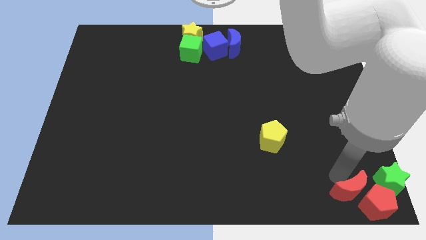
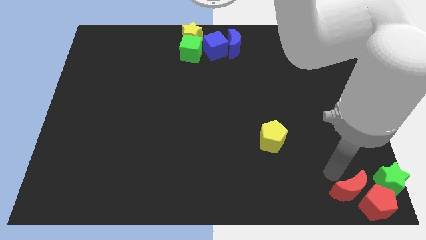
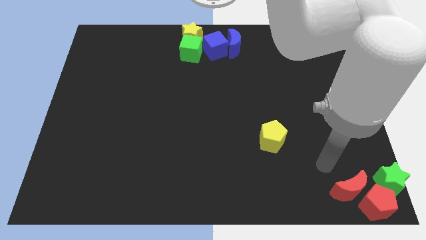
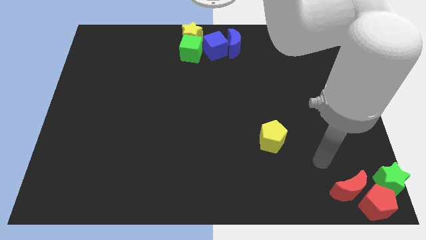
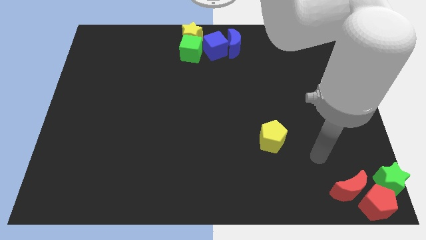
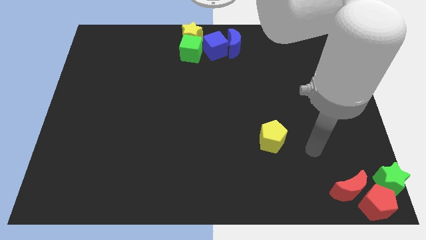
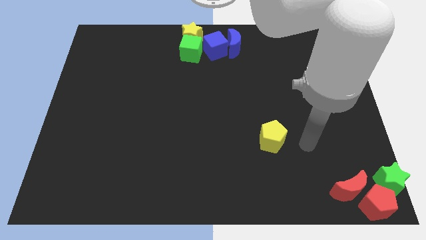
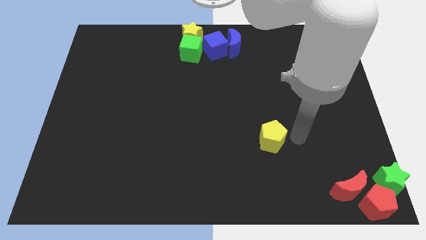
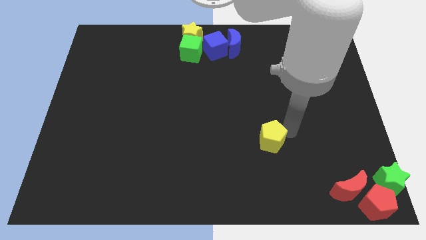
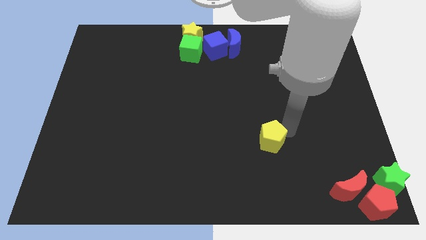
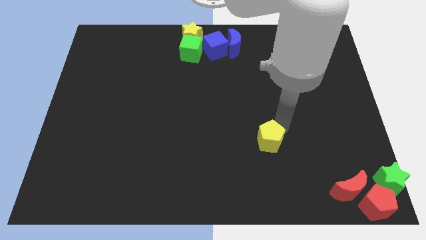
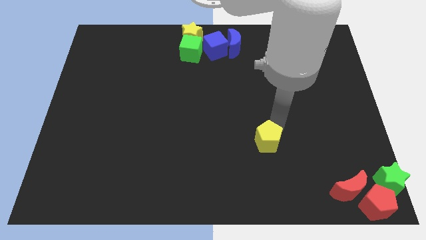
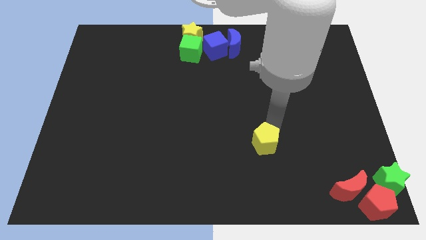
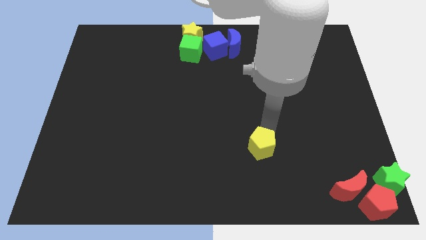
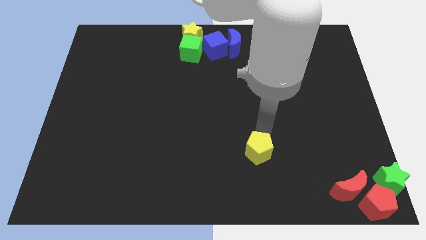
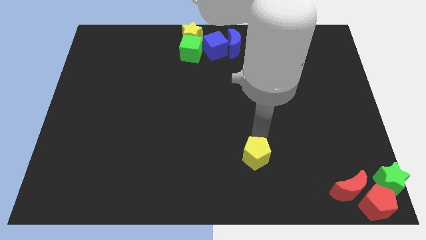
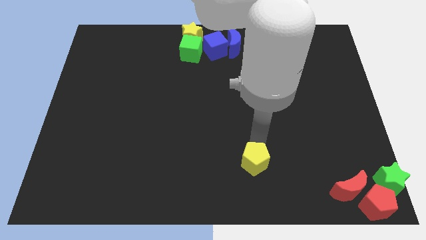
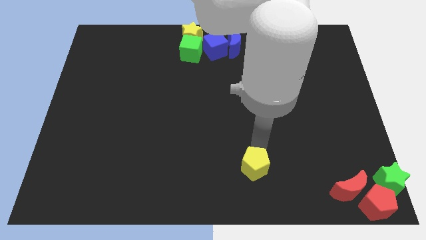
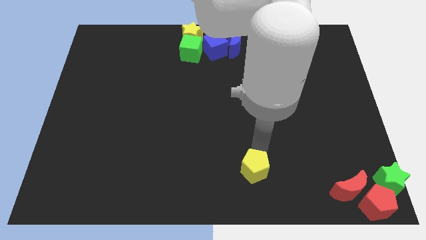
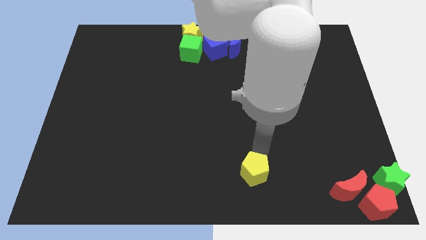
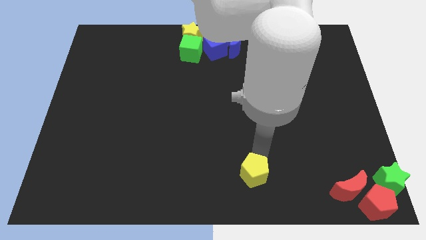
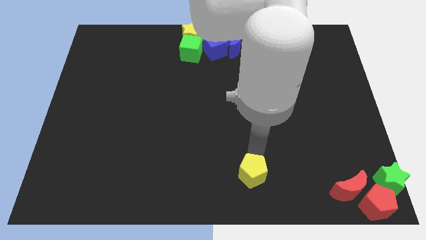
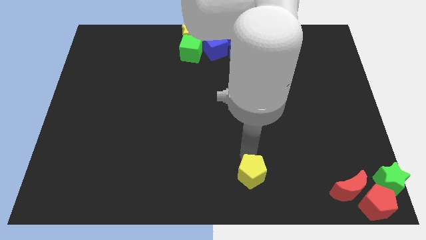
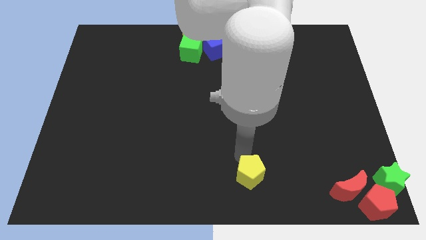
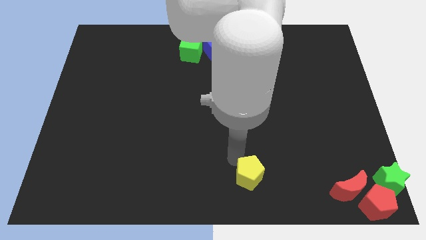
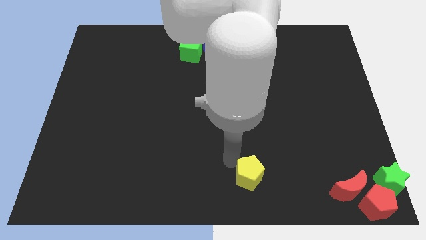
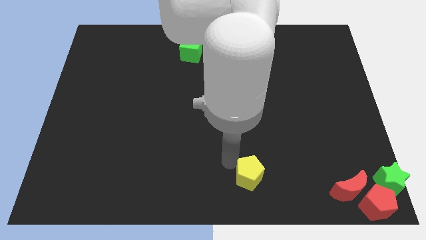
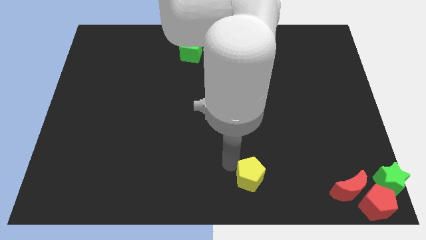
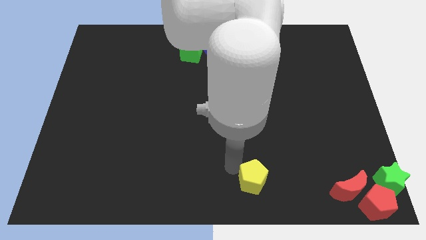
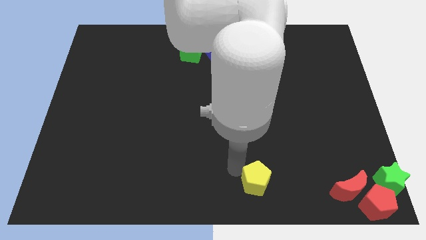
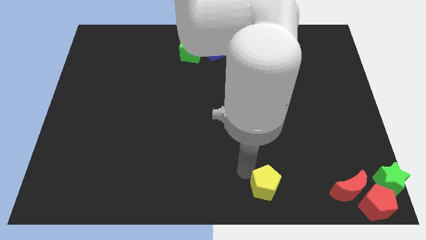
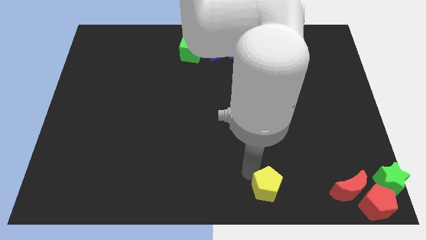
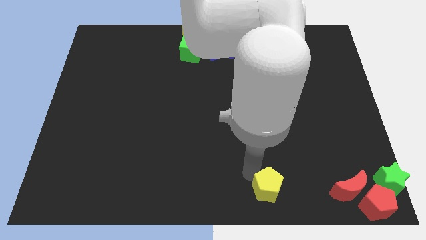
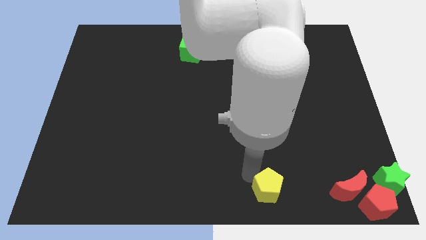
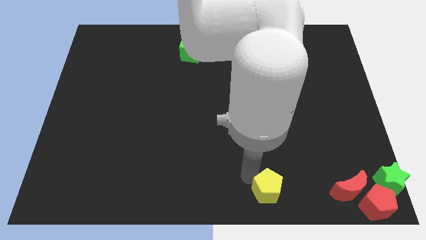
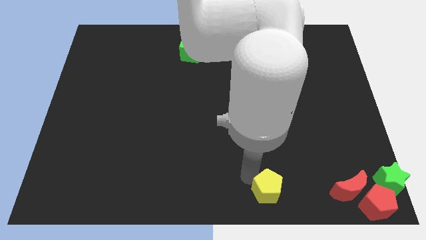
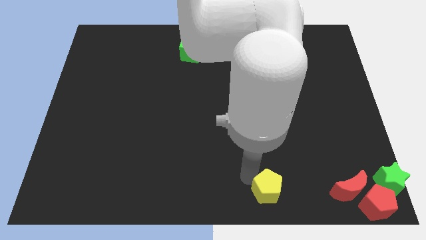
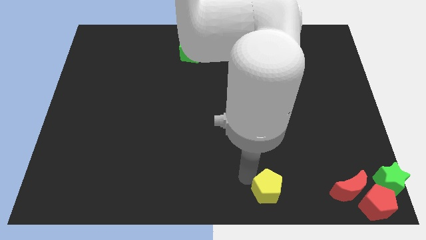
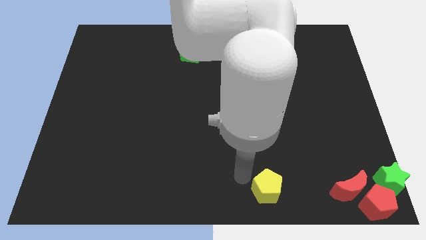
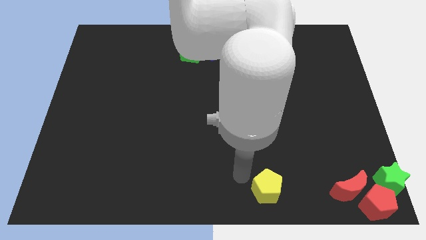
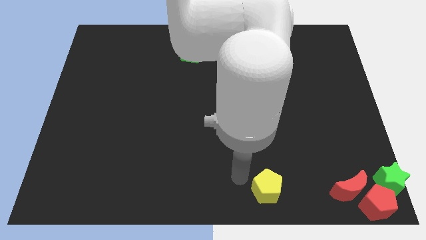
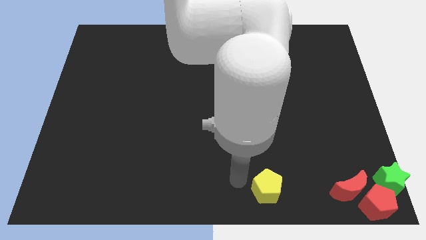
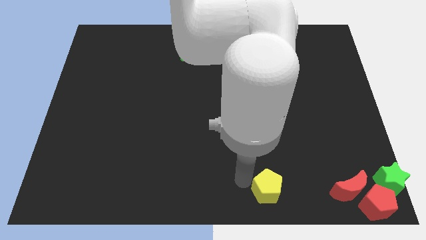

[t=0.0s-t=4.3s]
push the yellow pentagon to the center bottom of the board

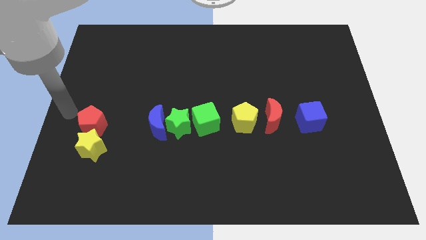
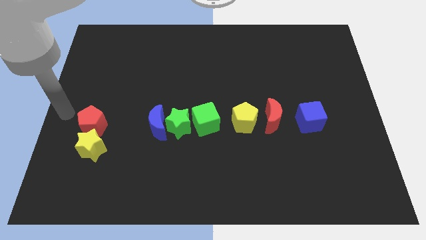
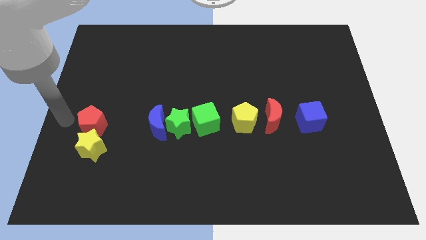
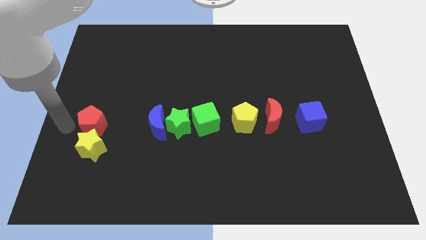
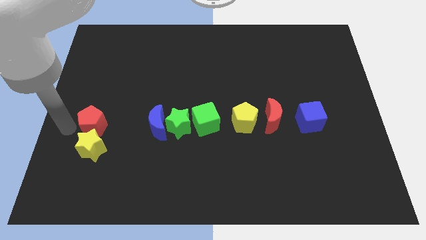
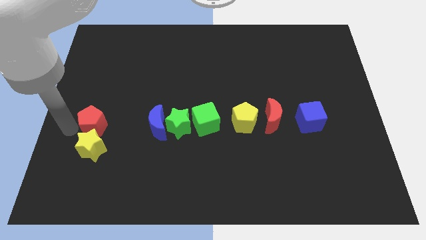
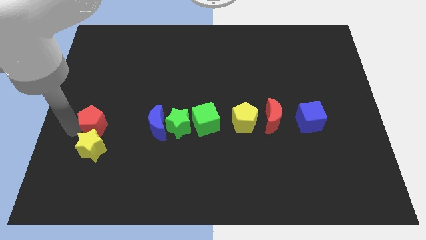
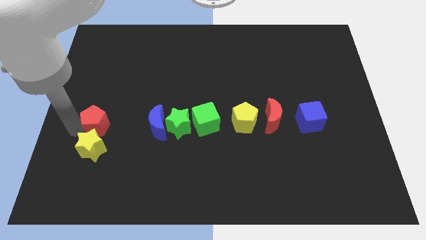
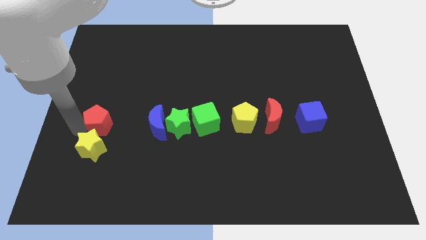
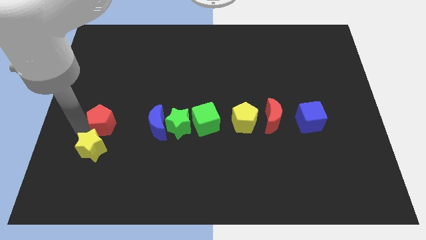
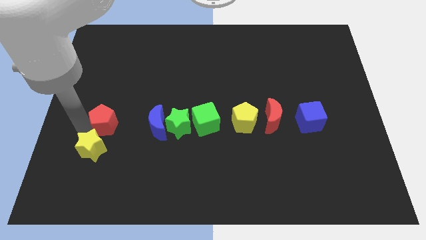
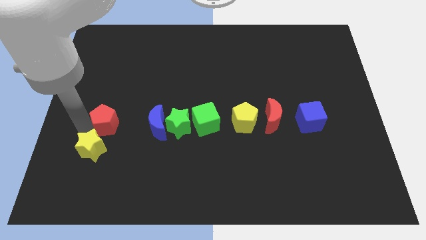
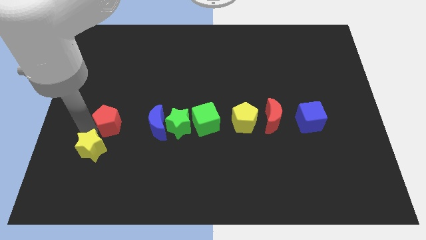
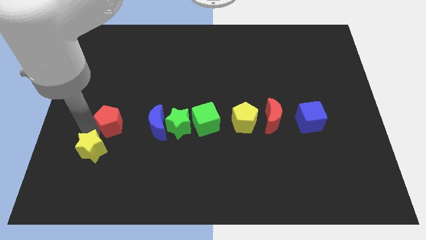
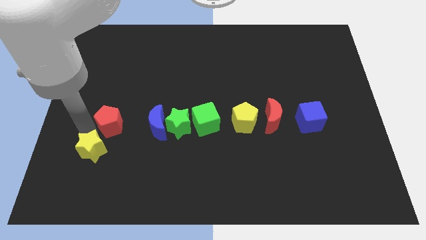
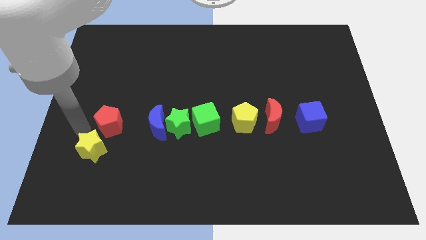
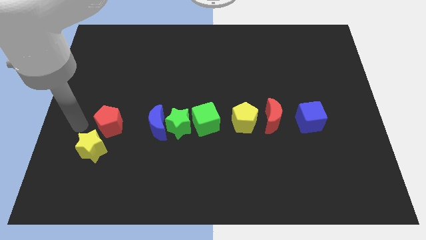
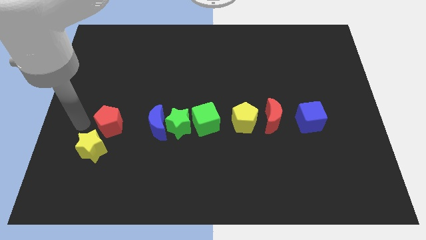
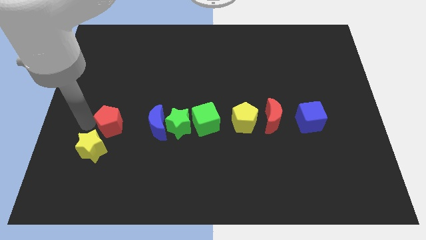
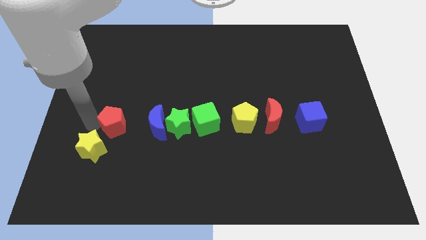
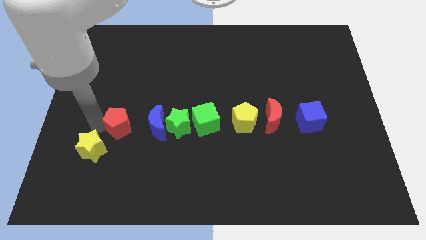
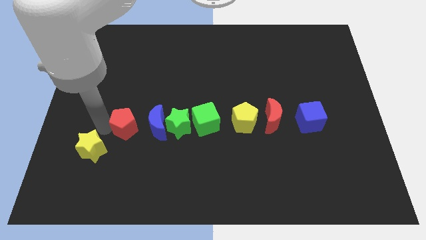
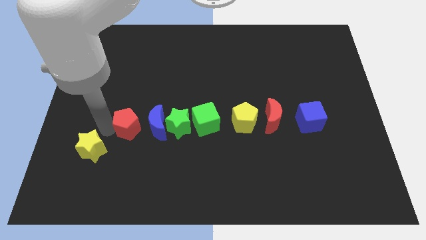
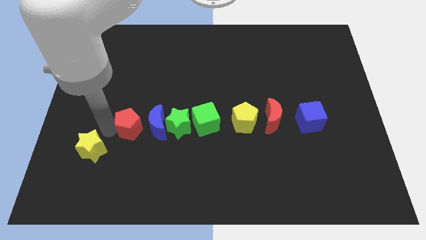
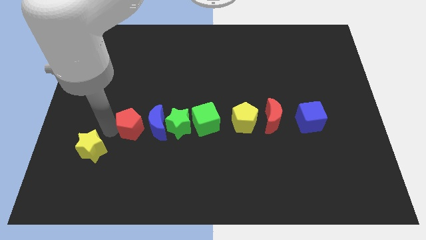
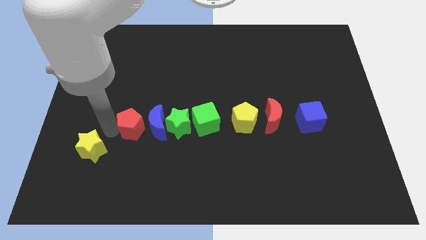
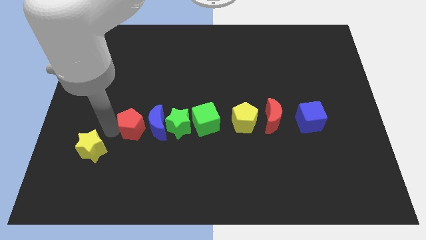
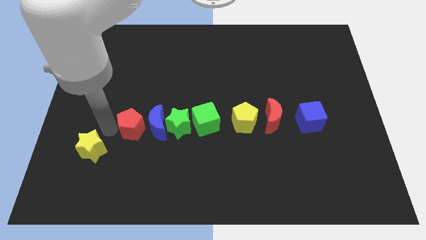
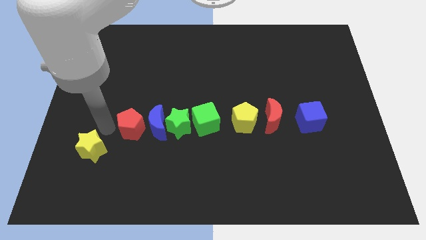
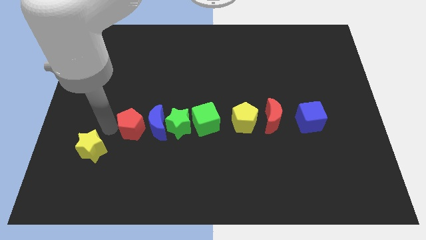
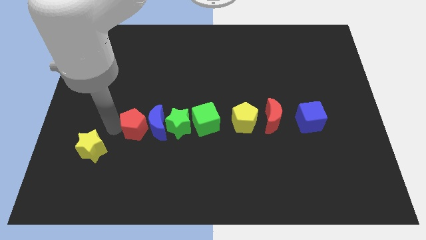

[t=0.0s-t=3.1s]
move the red pentagon into the blue crescent

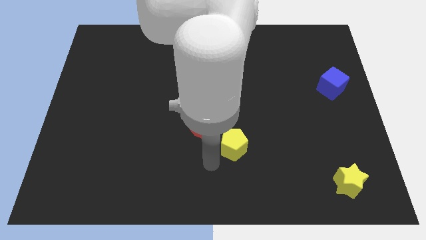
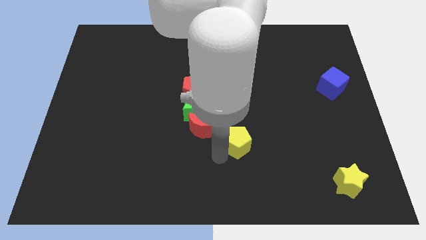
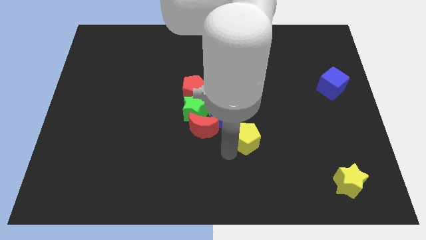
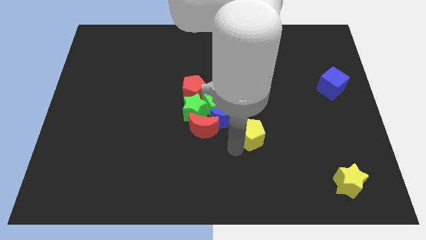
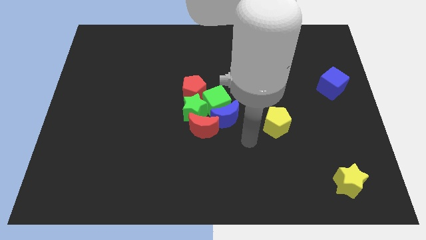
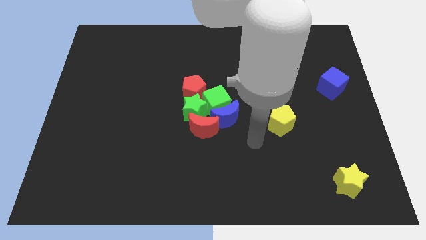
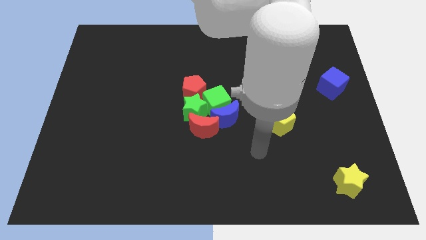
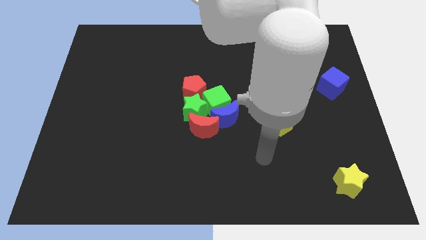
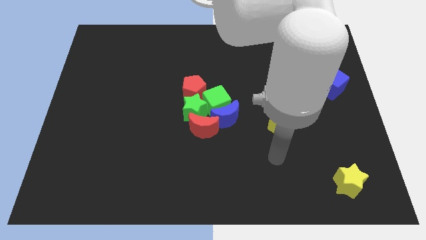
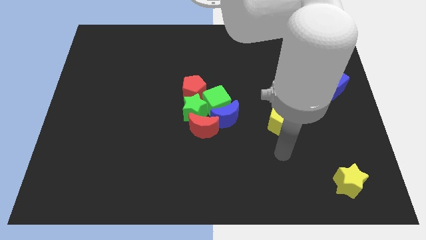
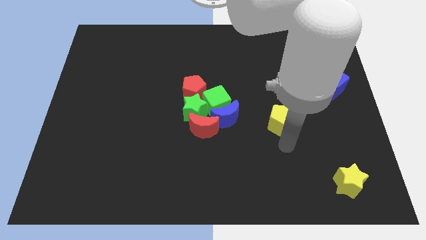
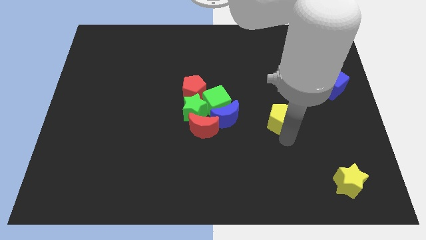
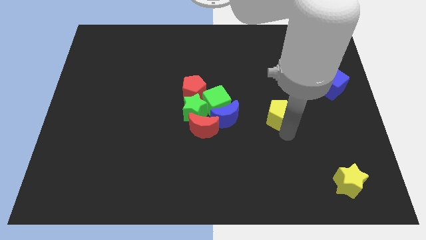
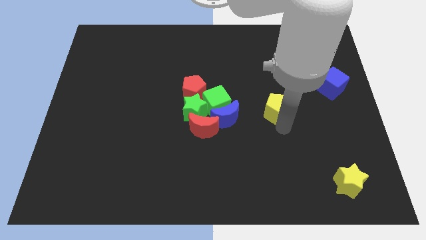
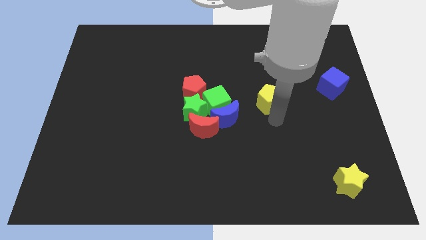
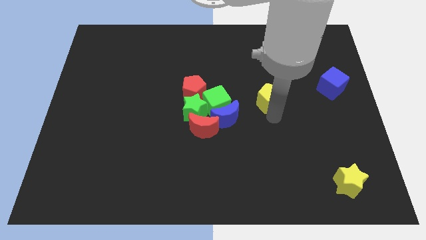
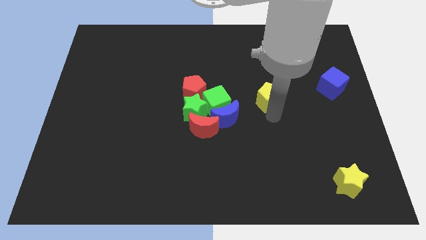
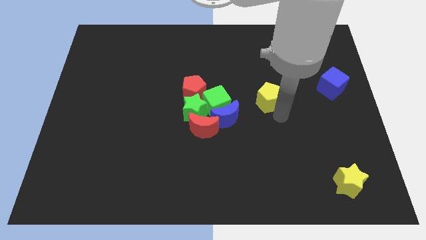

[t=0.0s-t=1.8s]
place the yellow pentagon to right side of the green cube
